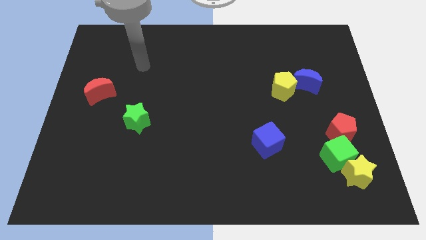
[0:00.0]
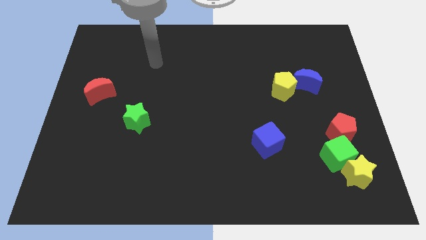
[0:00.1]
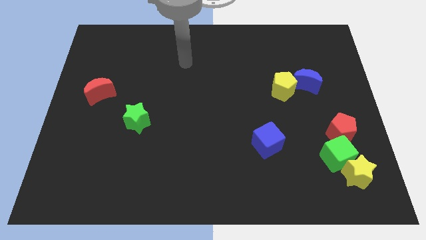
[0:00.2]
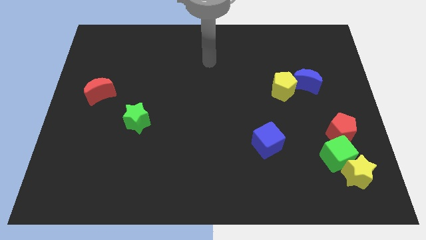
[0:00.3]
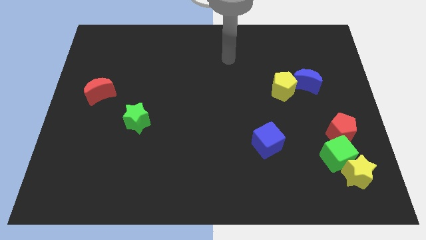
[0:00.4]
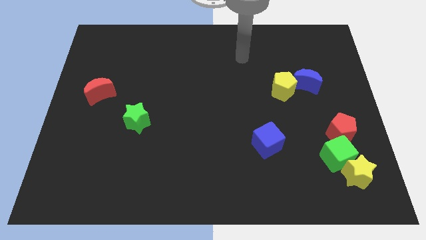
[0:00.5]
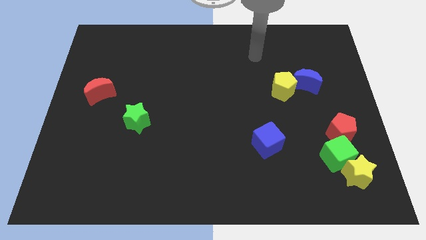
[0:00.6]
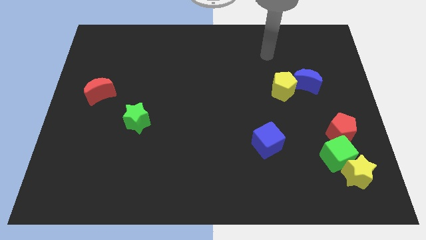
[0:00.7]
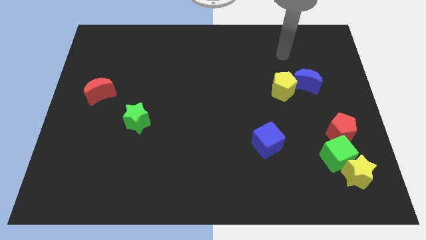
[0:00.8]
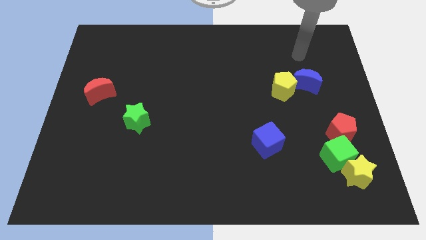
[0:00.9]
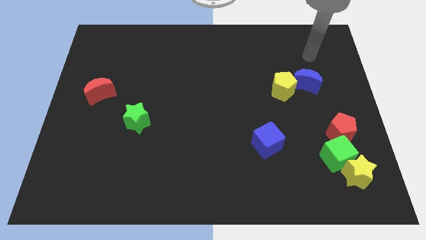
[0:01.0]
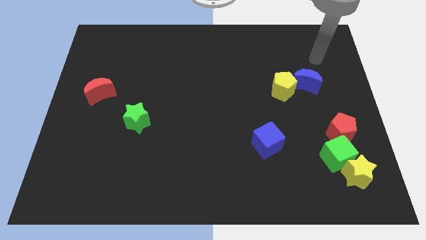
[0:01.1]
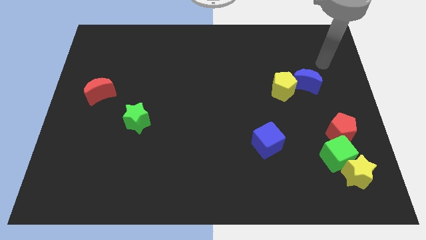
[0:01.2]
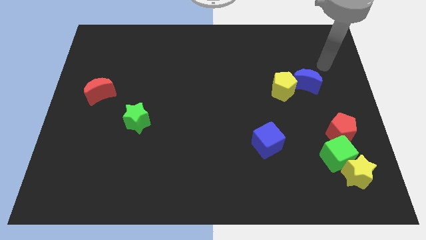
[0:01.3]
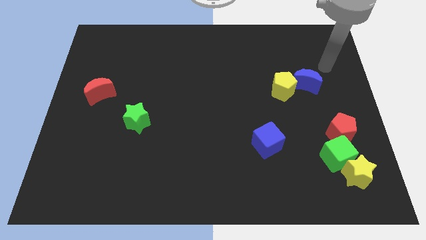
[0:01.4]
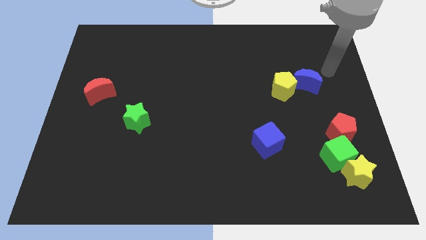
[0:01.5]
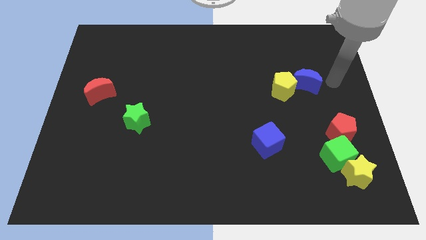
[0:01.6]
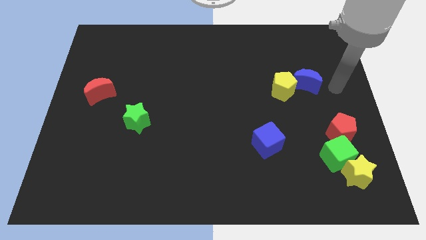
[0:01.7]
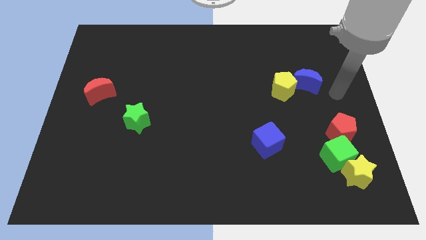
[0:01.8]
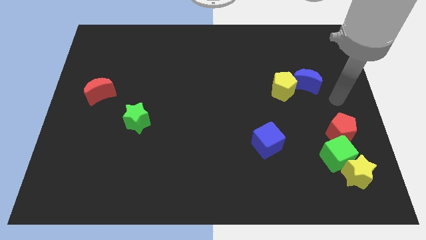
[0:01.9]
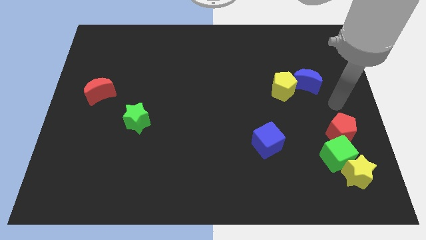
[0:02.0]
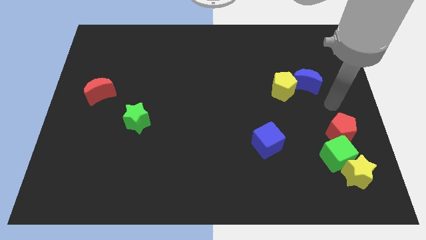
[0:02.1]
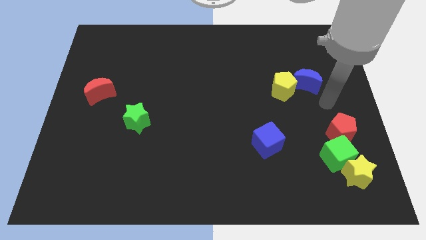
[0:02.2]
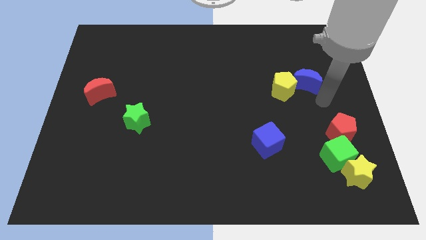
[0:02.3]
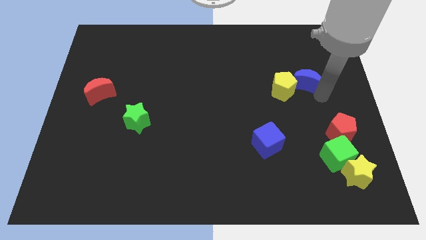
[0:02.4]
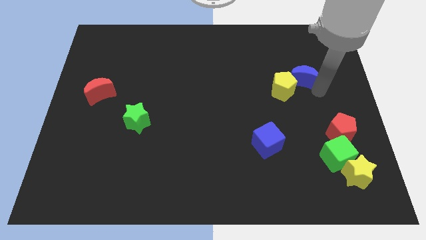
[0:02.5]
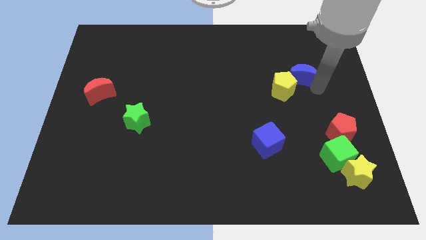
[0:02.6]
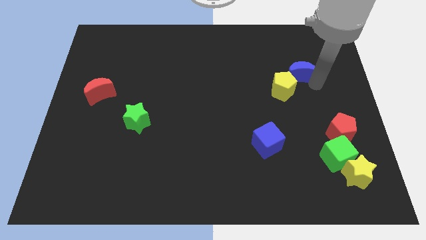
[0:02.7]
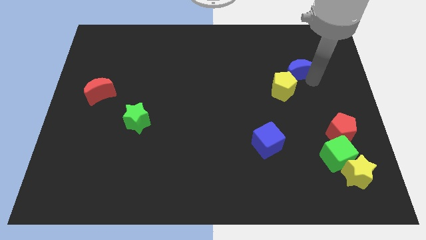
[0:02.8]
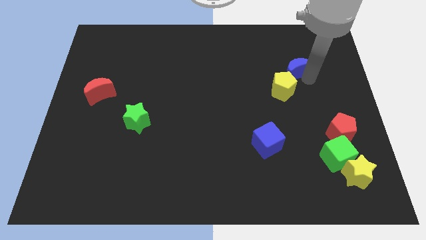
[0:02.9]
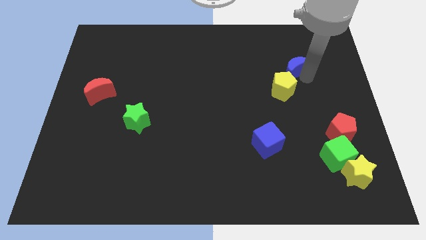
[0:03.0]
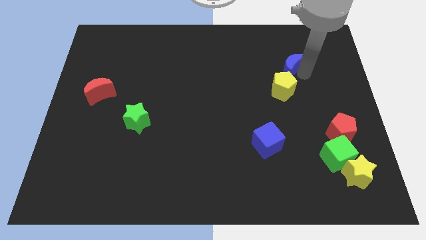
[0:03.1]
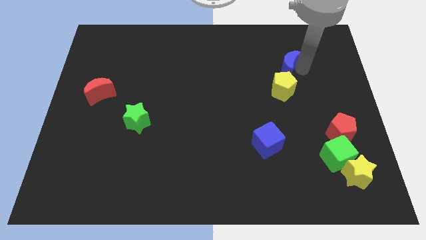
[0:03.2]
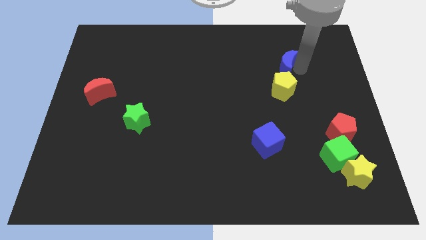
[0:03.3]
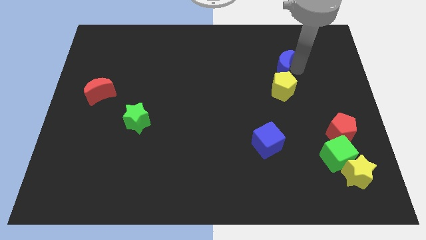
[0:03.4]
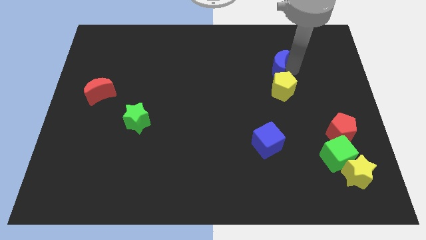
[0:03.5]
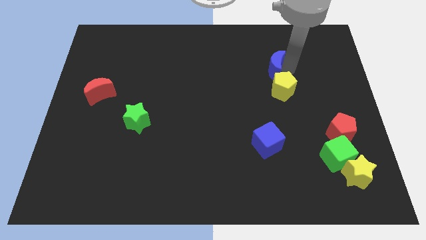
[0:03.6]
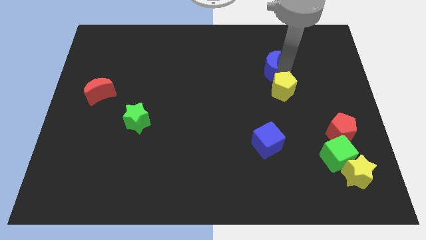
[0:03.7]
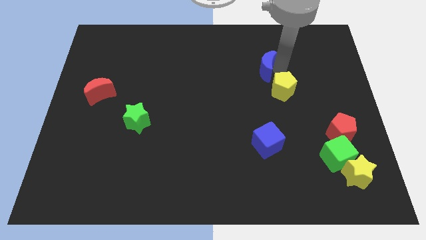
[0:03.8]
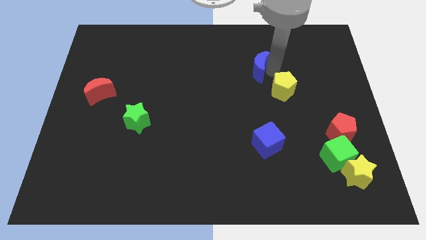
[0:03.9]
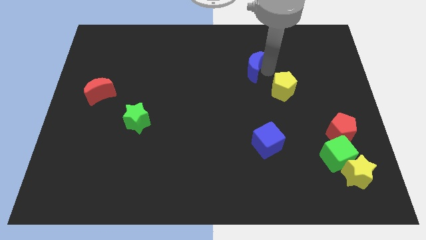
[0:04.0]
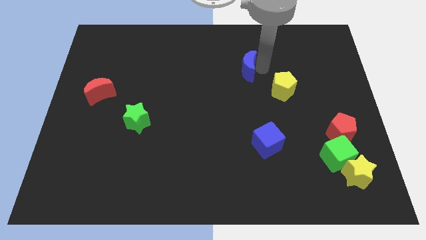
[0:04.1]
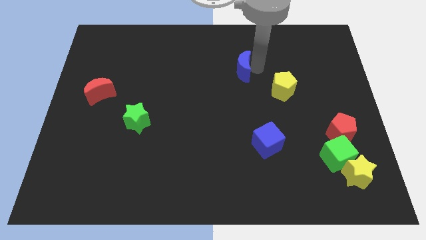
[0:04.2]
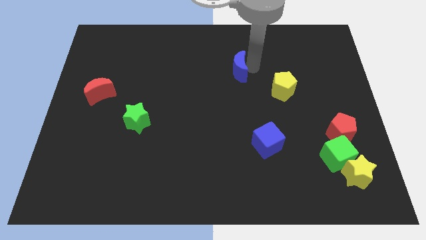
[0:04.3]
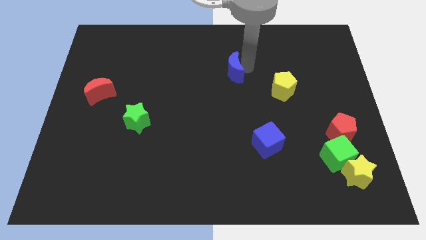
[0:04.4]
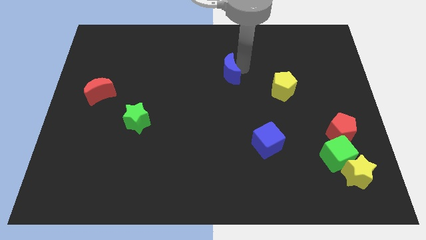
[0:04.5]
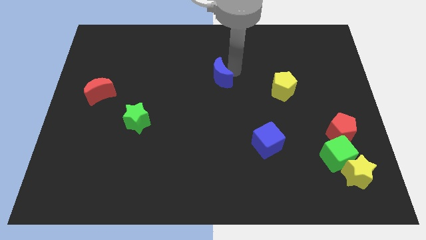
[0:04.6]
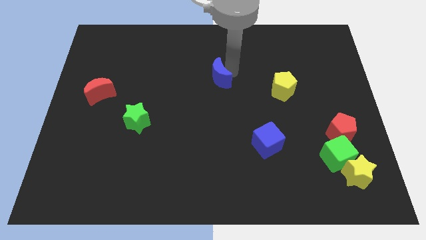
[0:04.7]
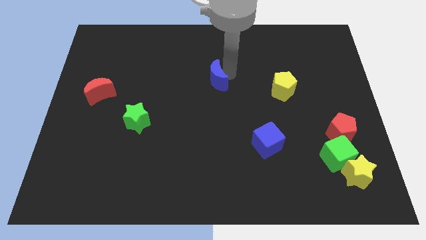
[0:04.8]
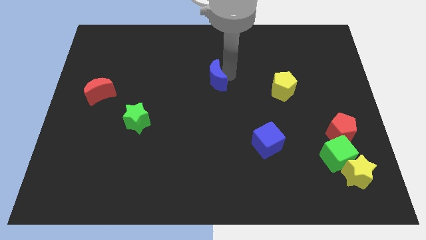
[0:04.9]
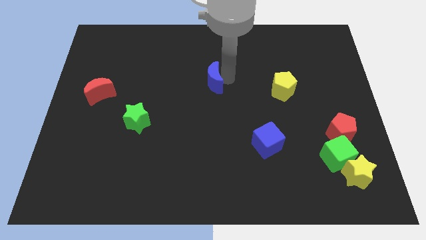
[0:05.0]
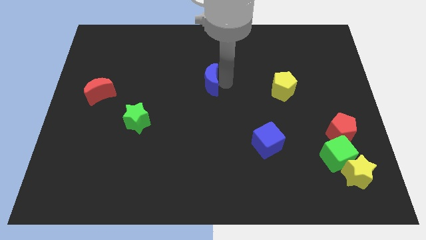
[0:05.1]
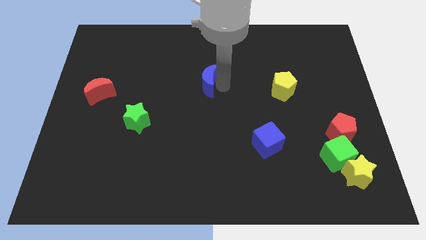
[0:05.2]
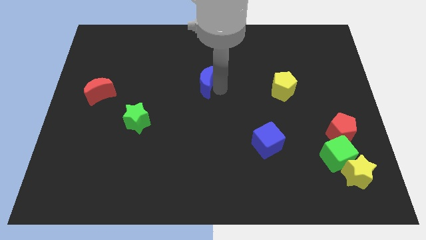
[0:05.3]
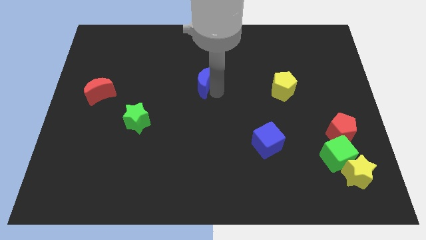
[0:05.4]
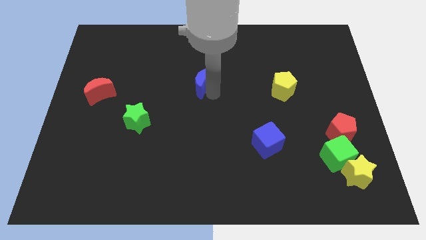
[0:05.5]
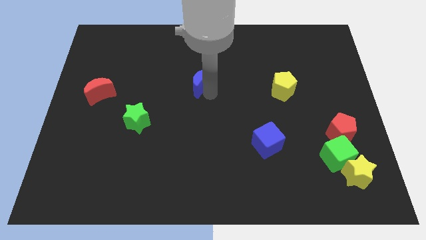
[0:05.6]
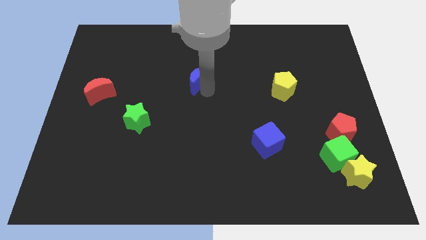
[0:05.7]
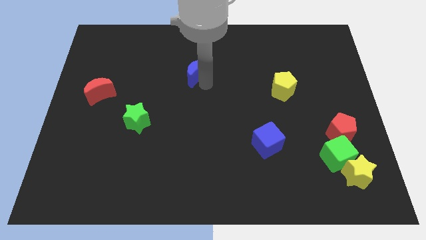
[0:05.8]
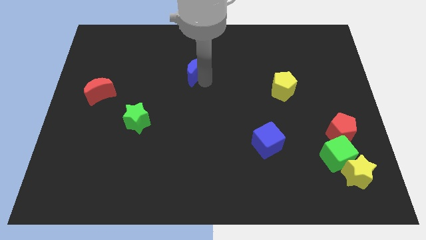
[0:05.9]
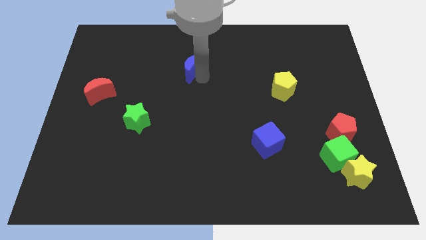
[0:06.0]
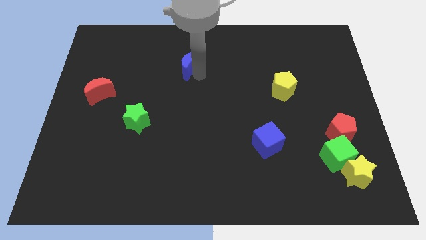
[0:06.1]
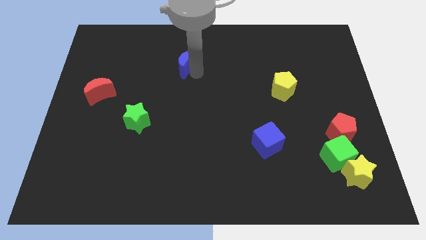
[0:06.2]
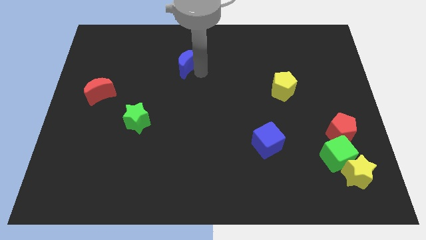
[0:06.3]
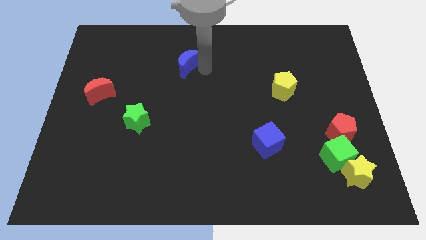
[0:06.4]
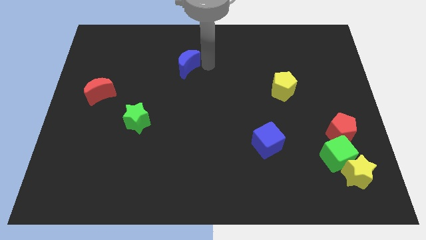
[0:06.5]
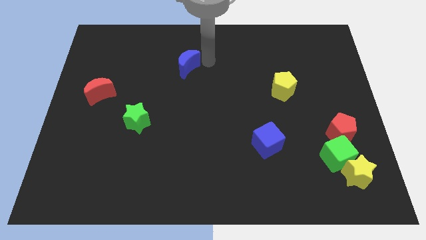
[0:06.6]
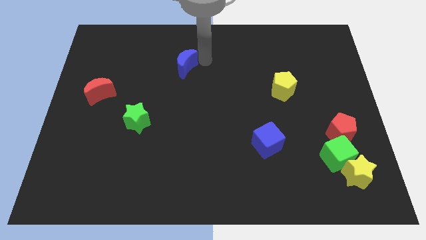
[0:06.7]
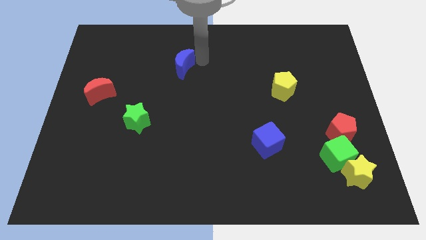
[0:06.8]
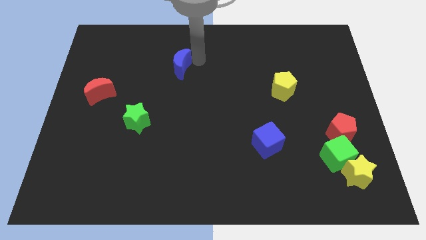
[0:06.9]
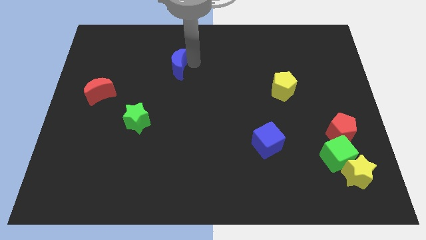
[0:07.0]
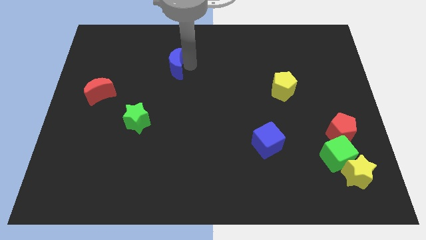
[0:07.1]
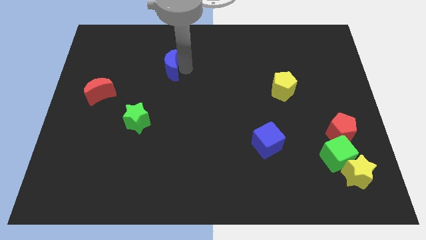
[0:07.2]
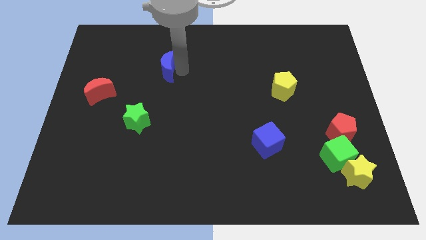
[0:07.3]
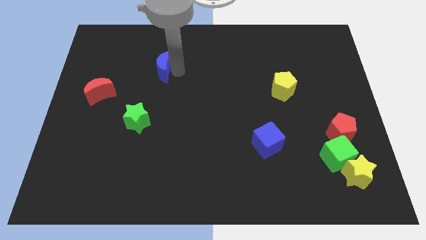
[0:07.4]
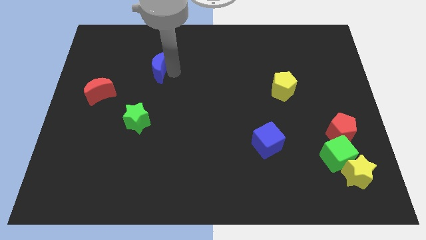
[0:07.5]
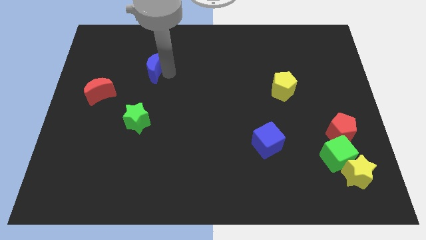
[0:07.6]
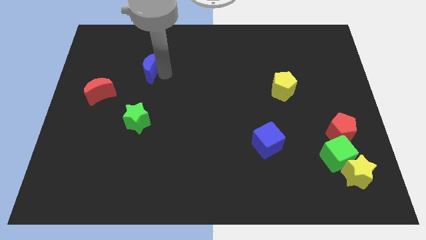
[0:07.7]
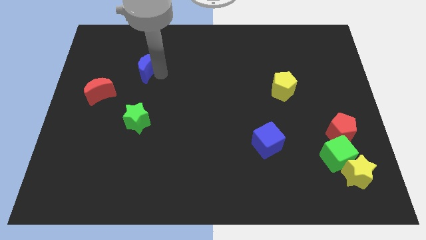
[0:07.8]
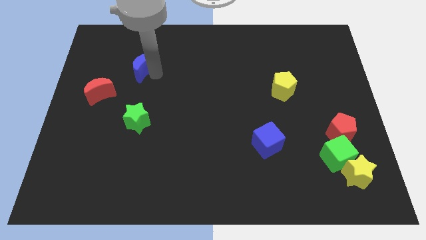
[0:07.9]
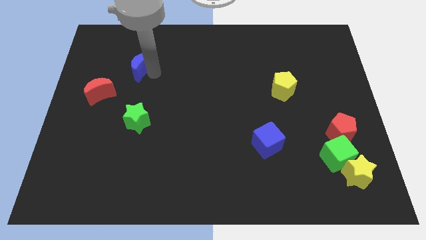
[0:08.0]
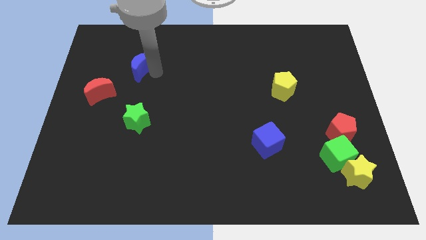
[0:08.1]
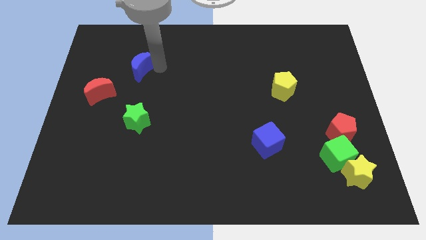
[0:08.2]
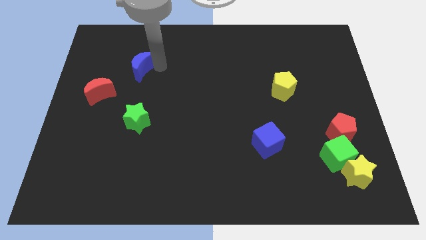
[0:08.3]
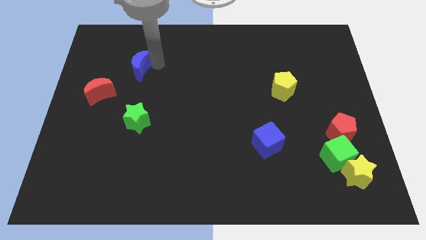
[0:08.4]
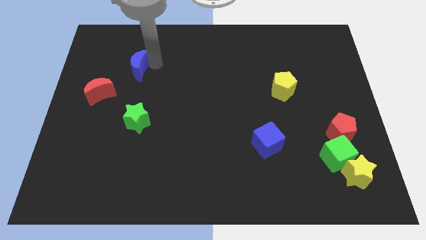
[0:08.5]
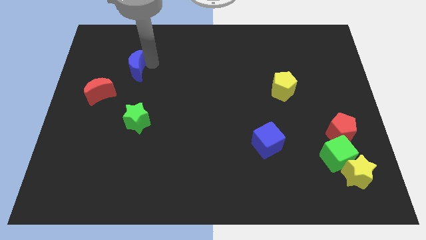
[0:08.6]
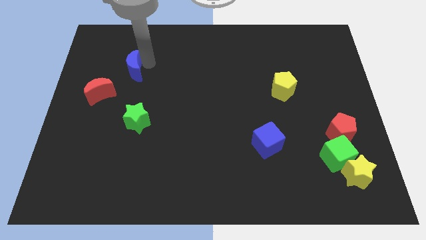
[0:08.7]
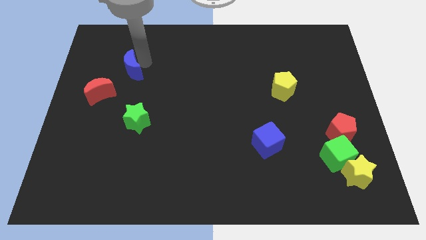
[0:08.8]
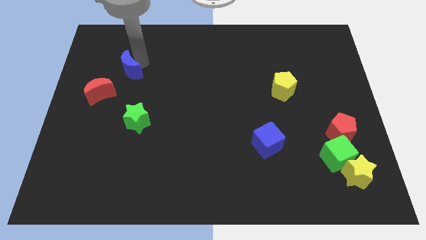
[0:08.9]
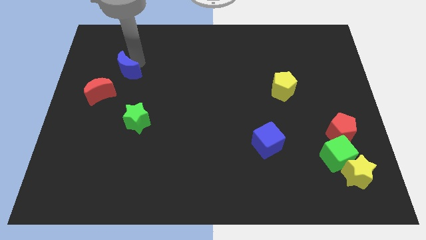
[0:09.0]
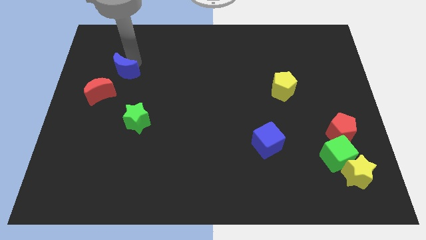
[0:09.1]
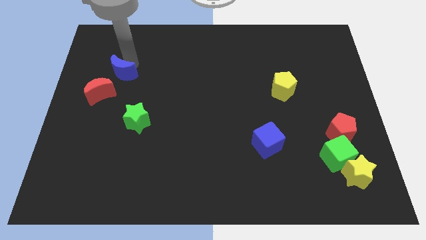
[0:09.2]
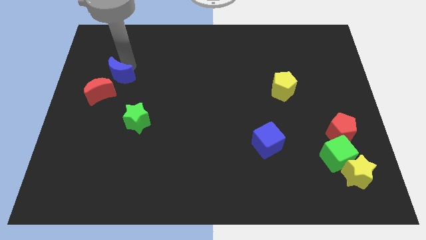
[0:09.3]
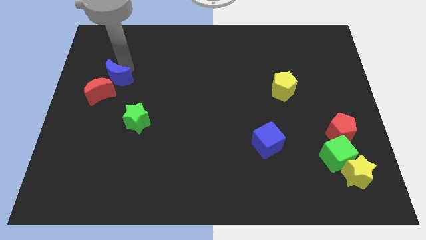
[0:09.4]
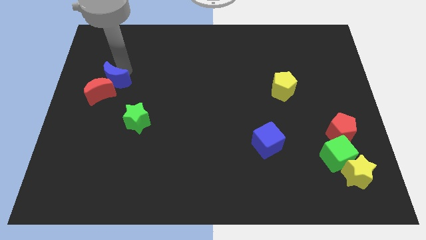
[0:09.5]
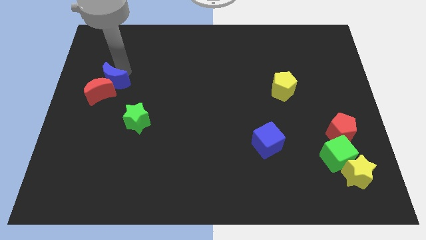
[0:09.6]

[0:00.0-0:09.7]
put the blue moon to the red moon
